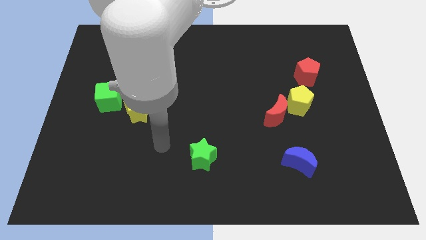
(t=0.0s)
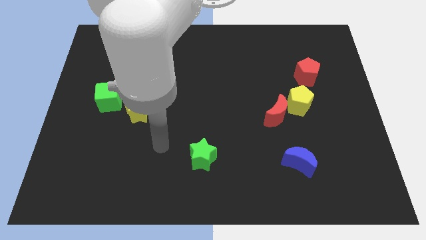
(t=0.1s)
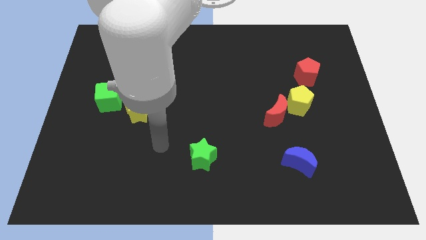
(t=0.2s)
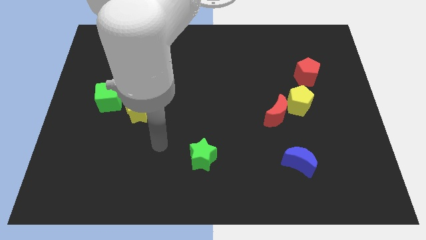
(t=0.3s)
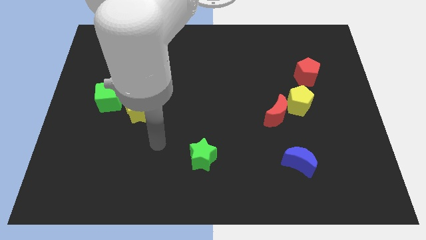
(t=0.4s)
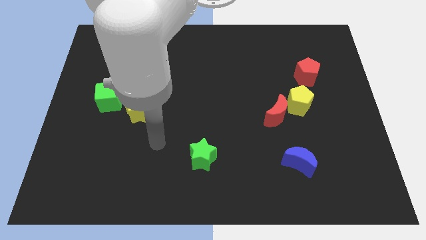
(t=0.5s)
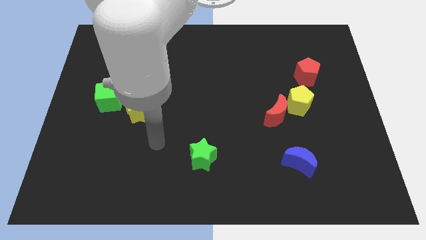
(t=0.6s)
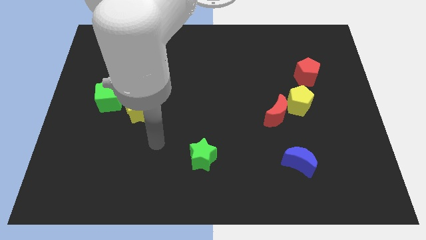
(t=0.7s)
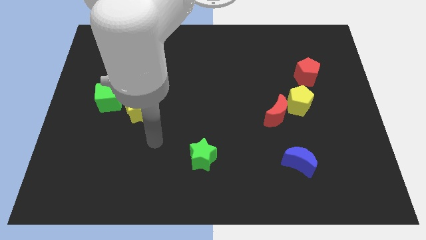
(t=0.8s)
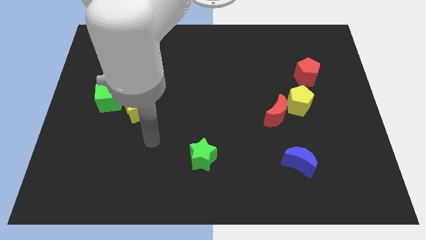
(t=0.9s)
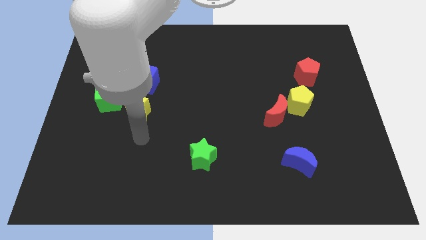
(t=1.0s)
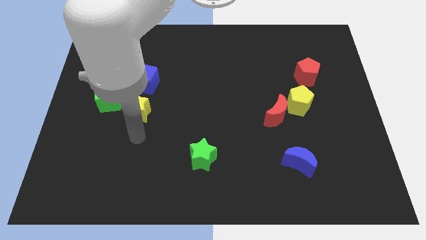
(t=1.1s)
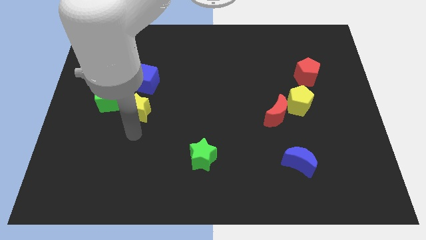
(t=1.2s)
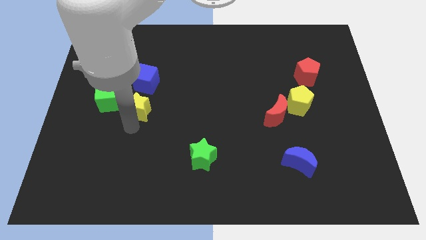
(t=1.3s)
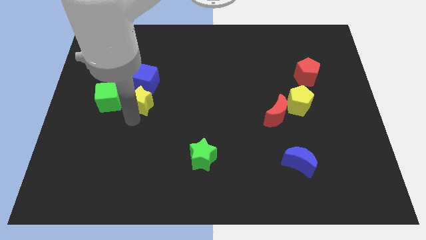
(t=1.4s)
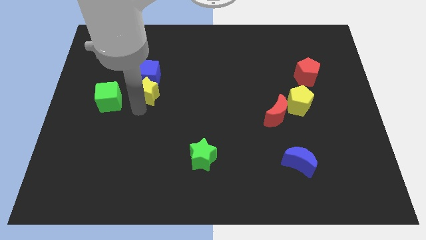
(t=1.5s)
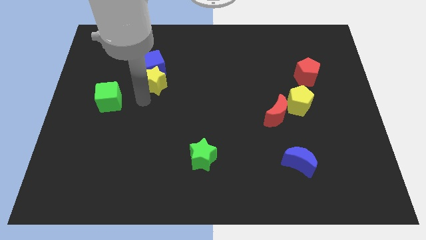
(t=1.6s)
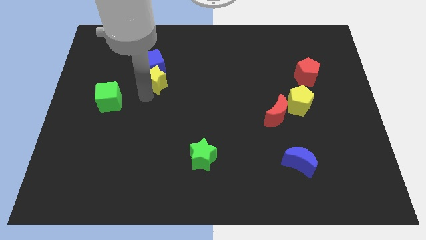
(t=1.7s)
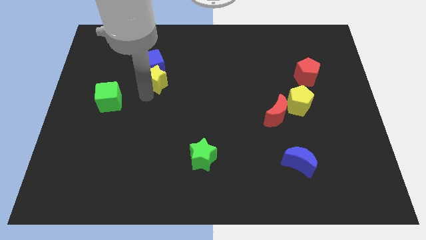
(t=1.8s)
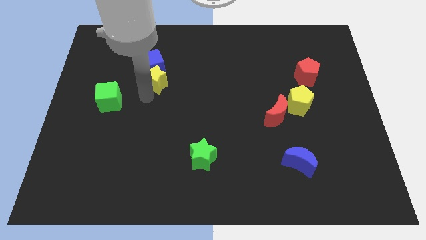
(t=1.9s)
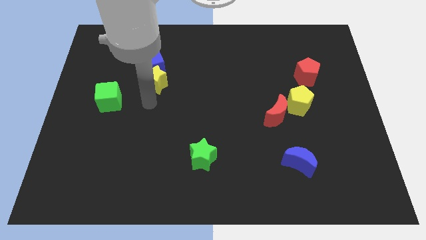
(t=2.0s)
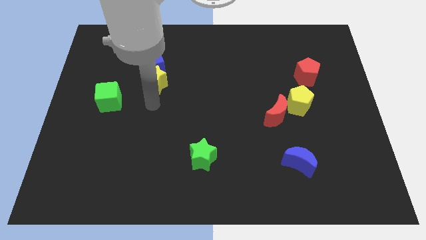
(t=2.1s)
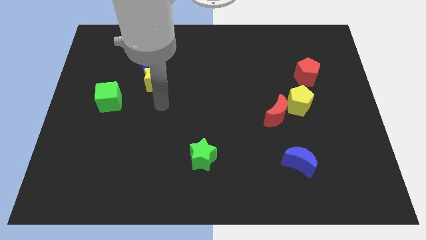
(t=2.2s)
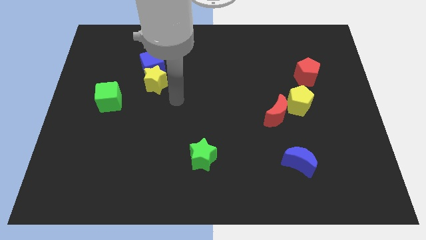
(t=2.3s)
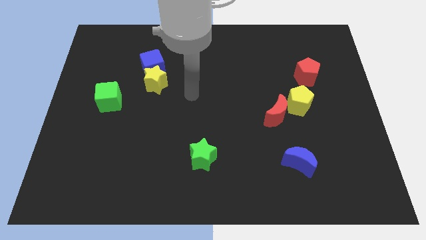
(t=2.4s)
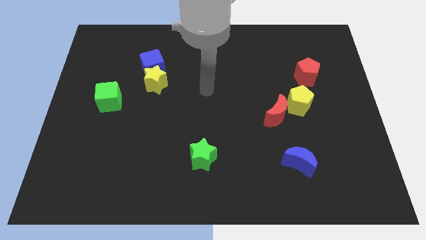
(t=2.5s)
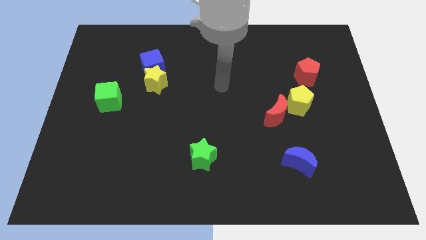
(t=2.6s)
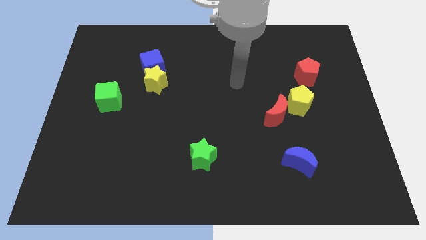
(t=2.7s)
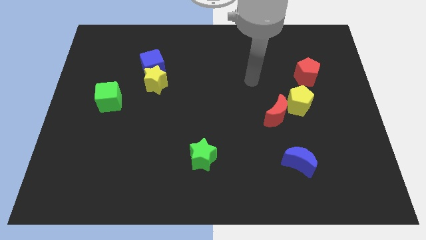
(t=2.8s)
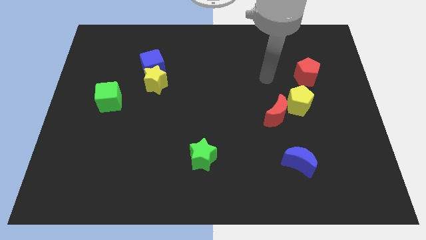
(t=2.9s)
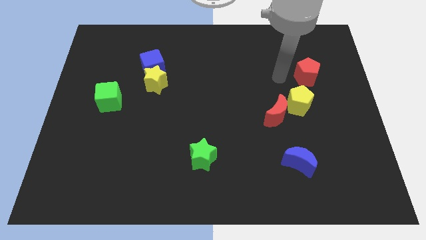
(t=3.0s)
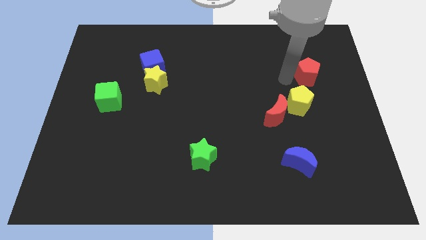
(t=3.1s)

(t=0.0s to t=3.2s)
push the yellow star into the blue cube

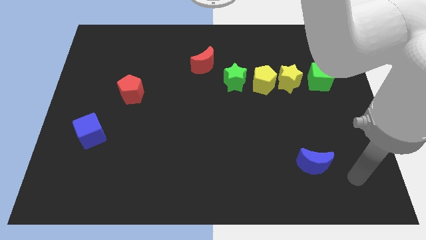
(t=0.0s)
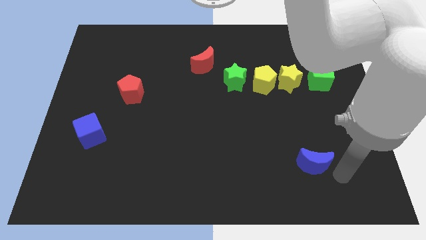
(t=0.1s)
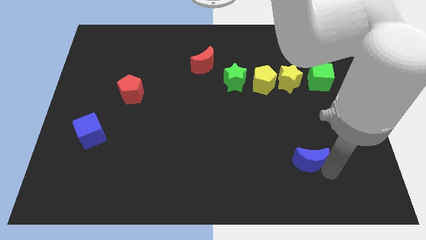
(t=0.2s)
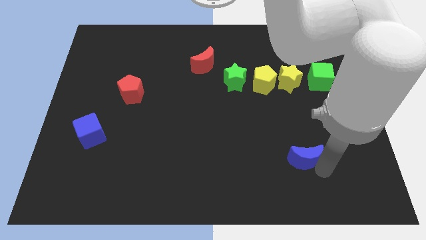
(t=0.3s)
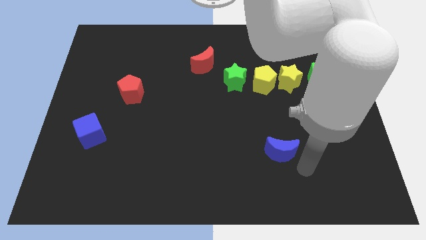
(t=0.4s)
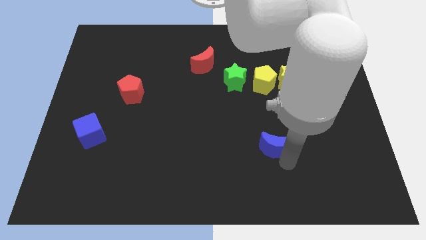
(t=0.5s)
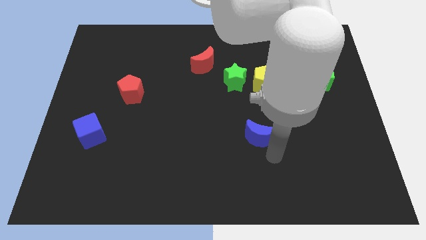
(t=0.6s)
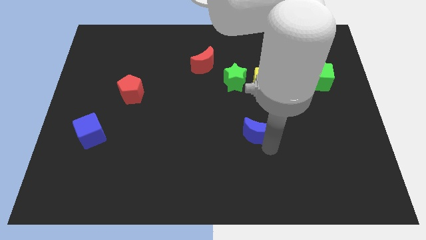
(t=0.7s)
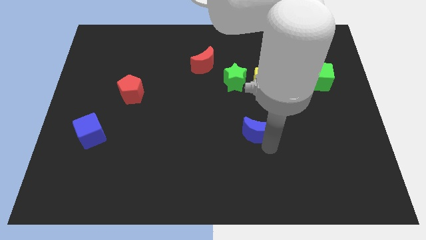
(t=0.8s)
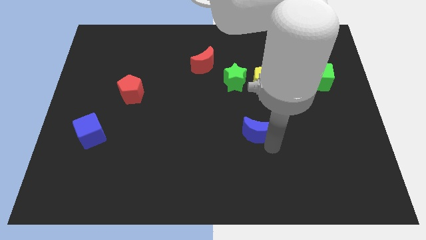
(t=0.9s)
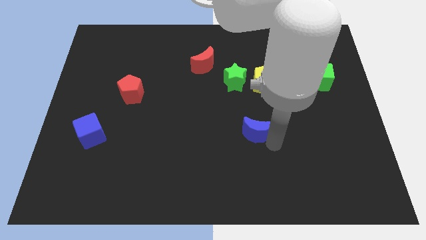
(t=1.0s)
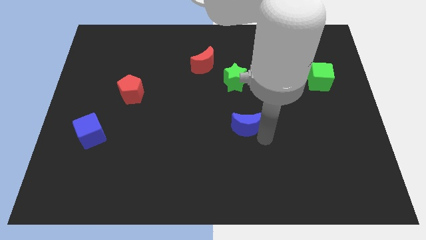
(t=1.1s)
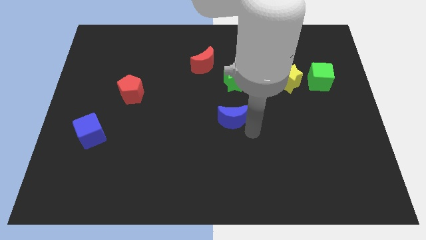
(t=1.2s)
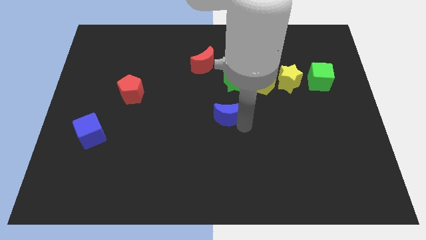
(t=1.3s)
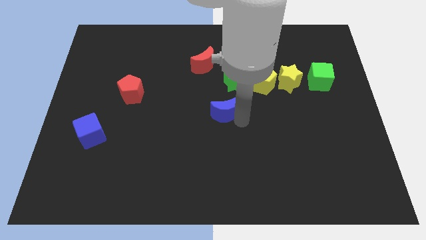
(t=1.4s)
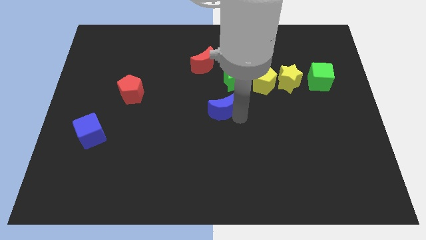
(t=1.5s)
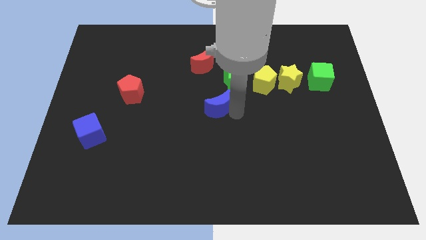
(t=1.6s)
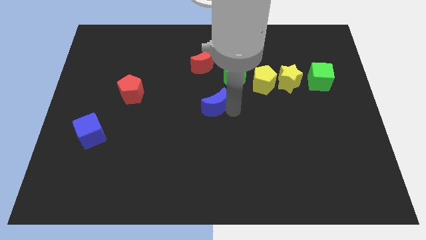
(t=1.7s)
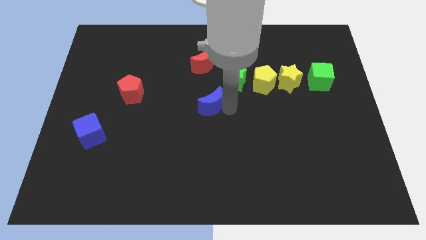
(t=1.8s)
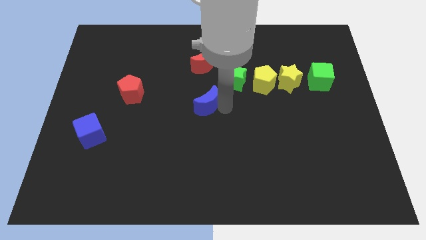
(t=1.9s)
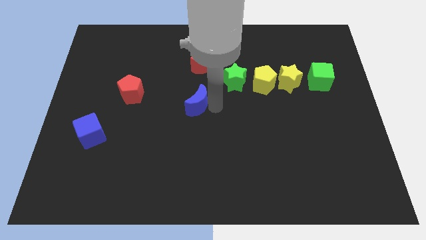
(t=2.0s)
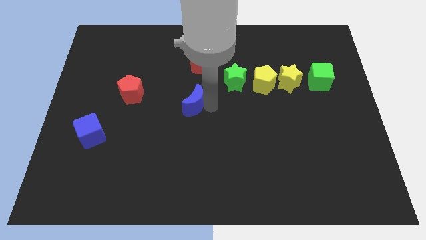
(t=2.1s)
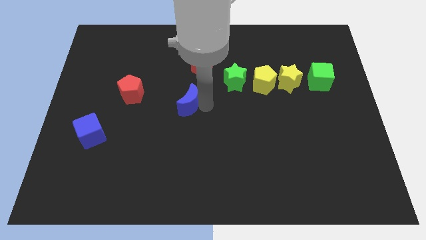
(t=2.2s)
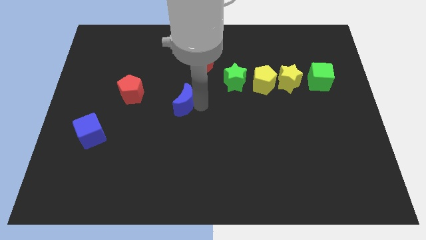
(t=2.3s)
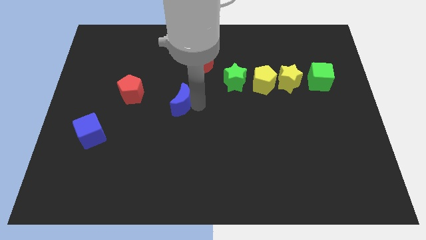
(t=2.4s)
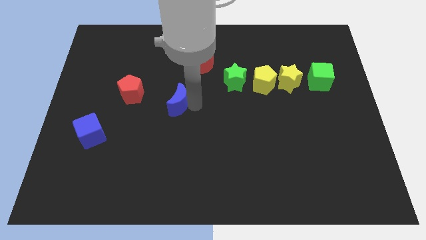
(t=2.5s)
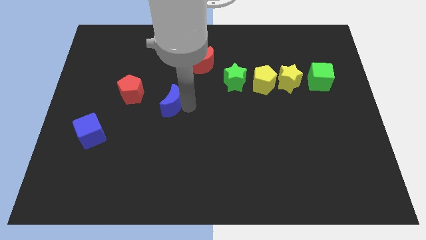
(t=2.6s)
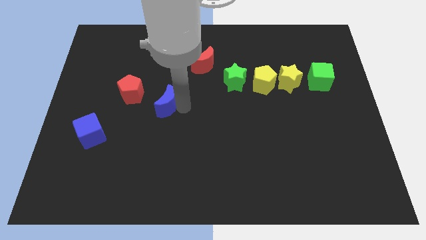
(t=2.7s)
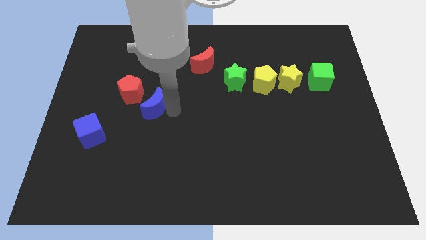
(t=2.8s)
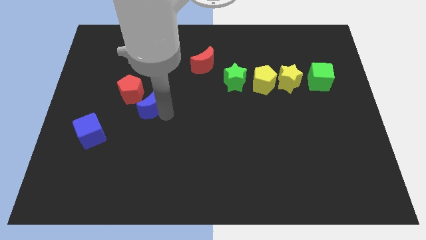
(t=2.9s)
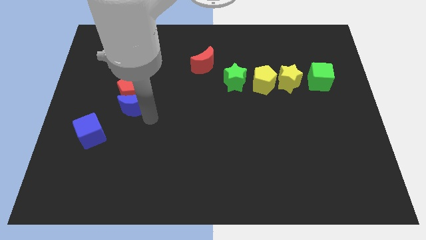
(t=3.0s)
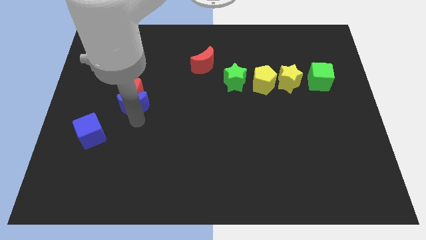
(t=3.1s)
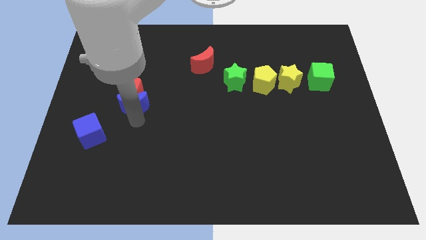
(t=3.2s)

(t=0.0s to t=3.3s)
push the blue moon to the bottom of the red pentagon

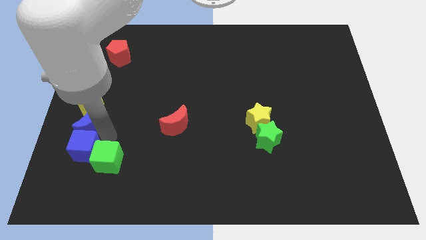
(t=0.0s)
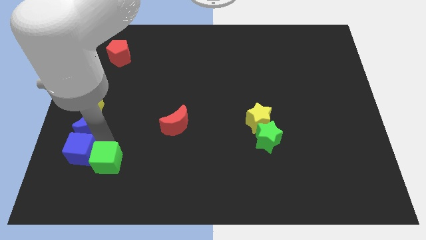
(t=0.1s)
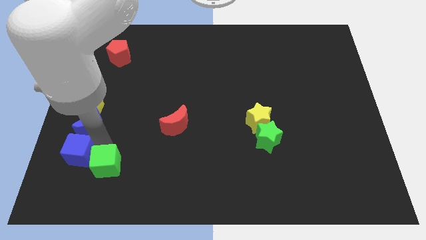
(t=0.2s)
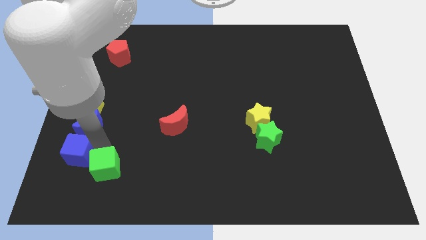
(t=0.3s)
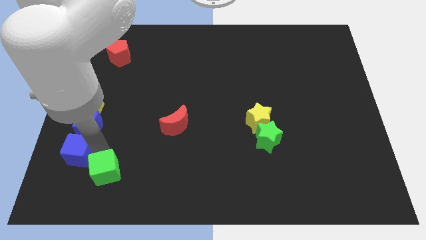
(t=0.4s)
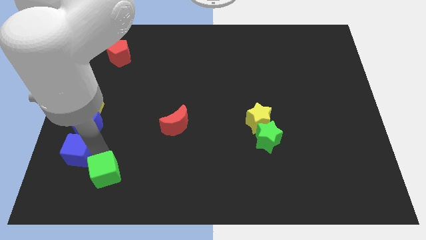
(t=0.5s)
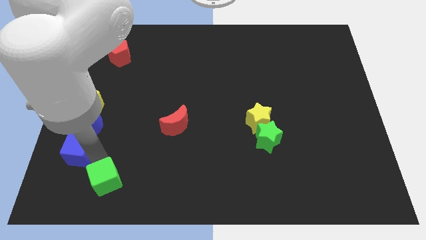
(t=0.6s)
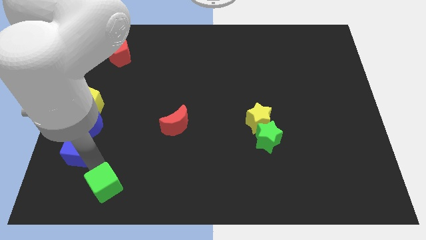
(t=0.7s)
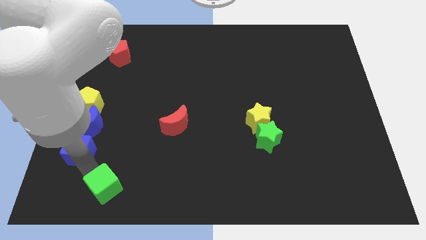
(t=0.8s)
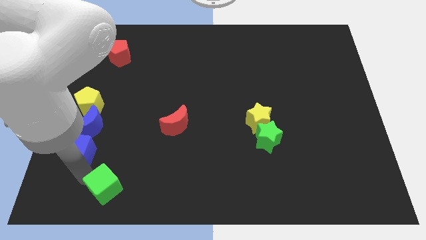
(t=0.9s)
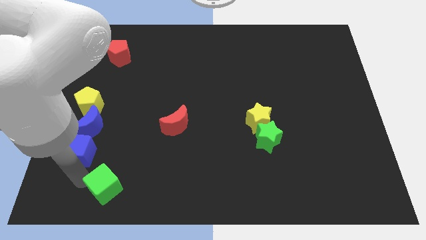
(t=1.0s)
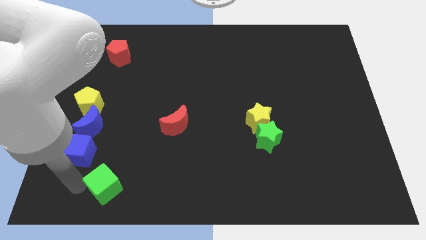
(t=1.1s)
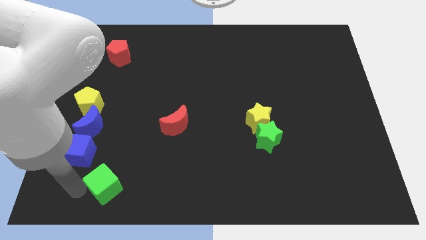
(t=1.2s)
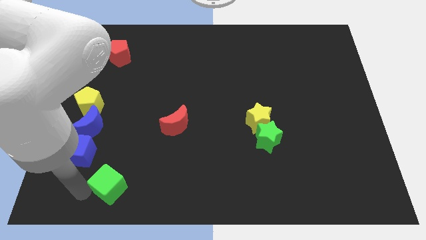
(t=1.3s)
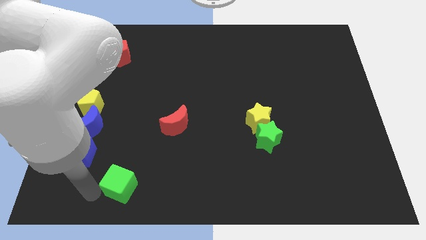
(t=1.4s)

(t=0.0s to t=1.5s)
separate green cube from the blue cube

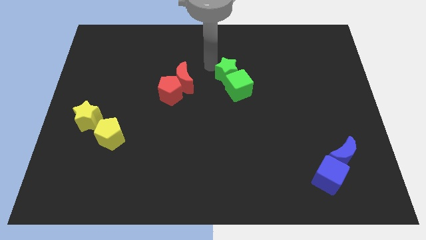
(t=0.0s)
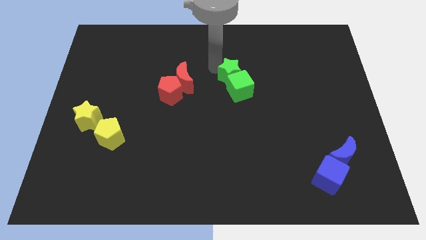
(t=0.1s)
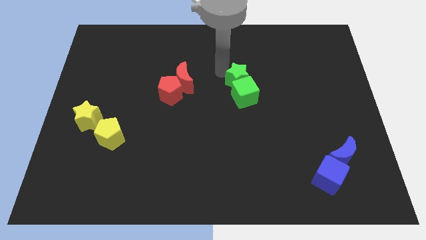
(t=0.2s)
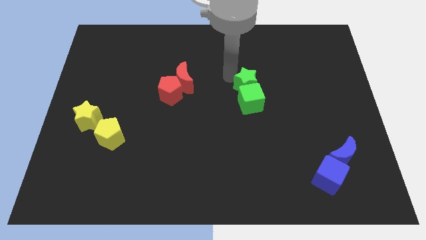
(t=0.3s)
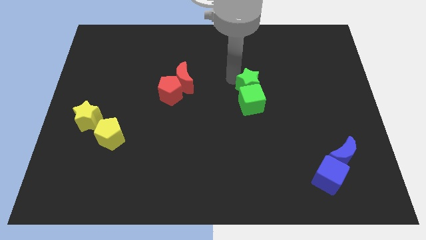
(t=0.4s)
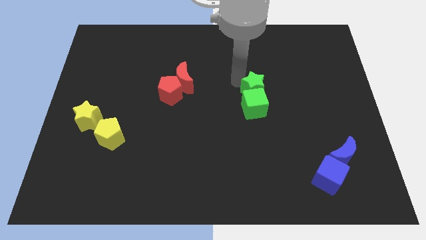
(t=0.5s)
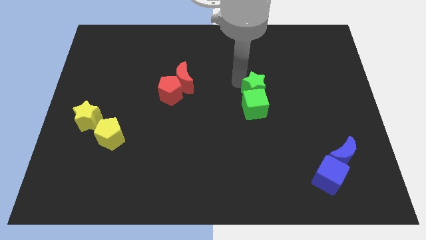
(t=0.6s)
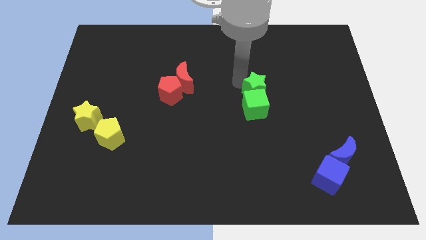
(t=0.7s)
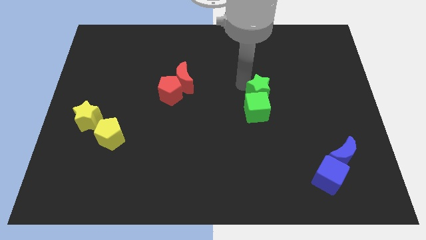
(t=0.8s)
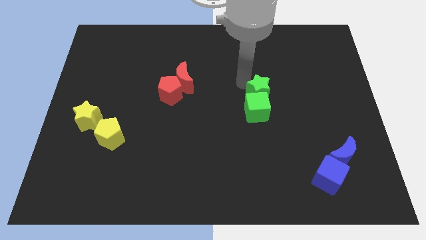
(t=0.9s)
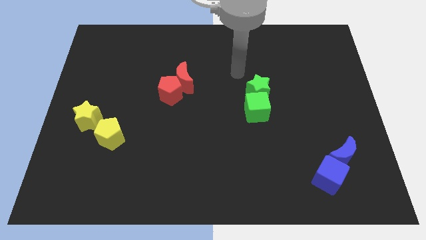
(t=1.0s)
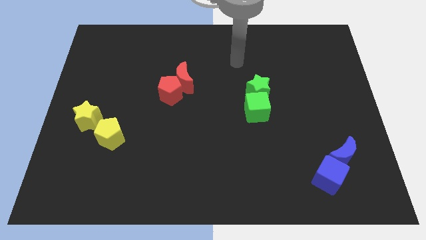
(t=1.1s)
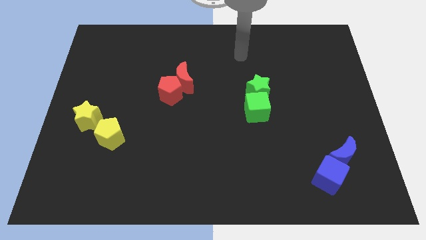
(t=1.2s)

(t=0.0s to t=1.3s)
push the green blocks towards downwards
